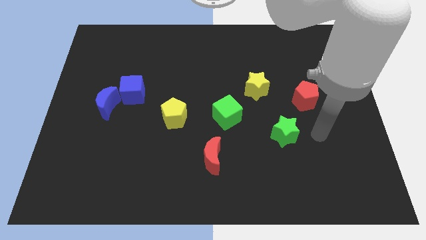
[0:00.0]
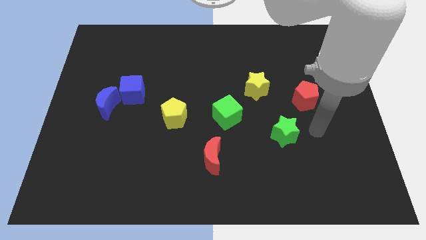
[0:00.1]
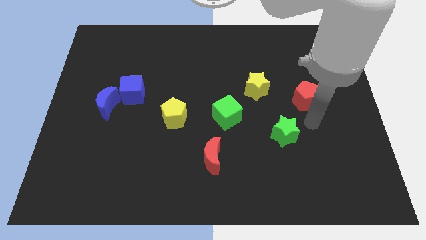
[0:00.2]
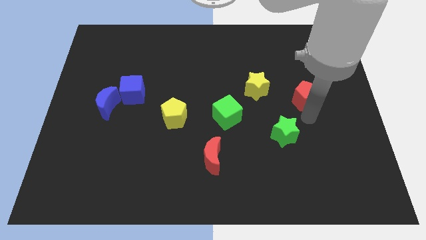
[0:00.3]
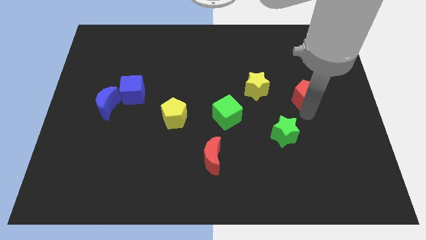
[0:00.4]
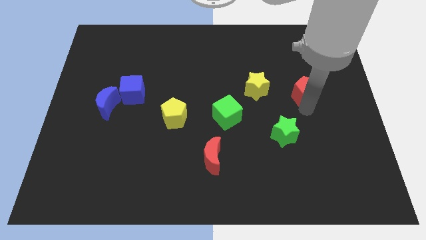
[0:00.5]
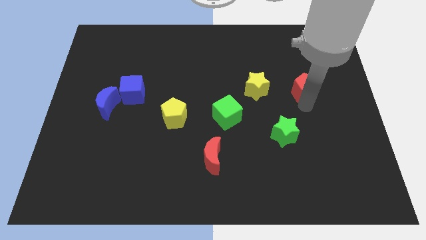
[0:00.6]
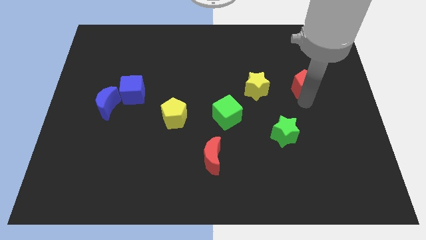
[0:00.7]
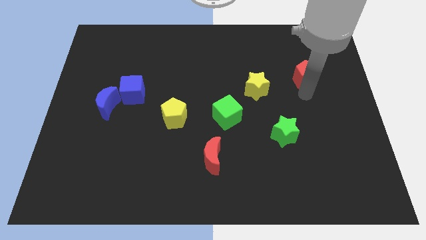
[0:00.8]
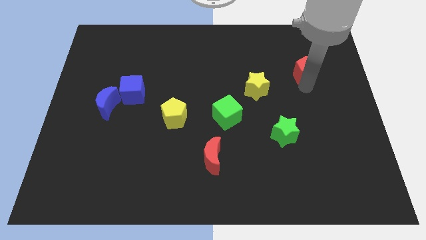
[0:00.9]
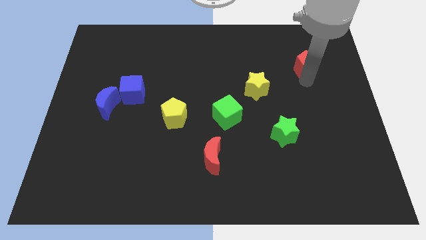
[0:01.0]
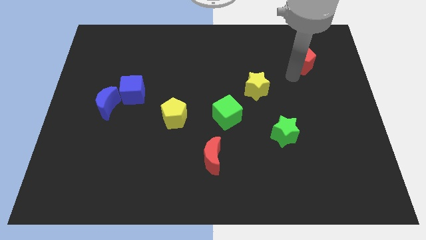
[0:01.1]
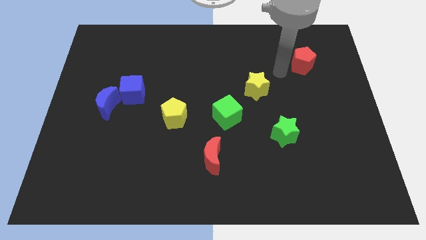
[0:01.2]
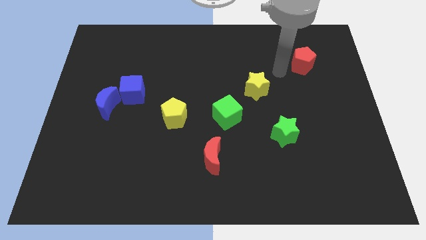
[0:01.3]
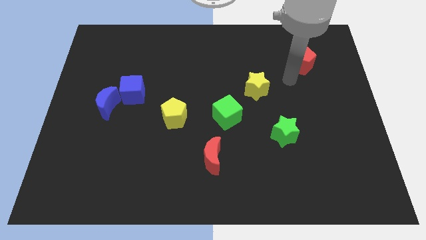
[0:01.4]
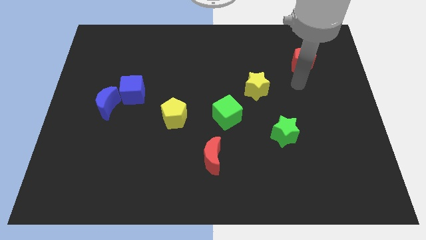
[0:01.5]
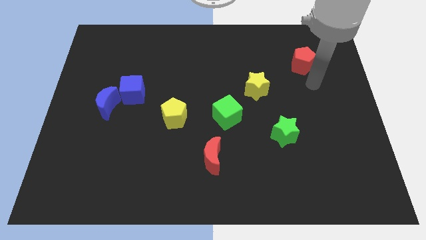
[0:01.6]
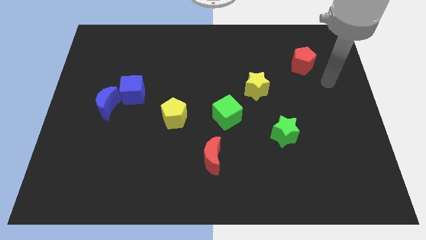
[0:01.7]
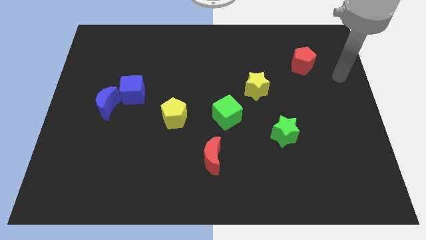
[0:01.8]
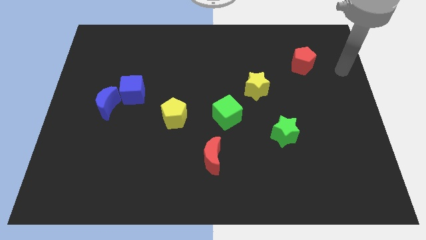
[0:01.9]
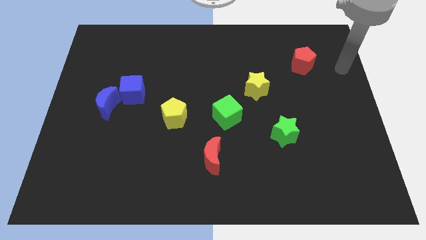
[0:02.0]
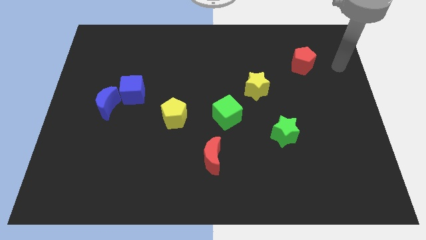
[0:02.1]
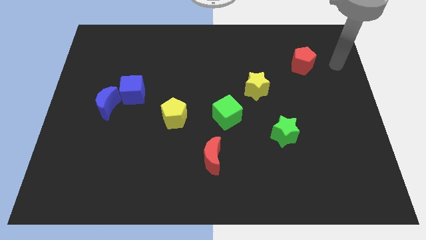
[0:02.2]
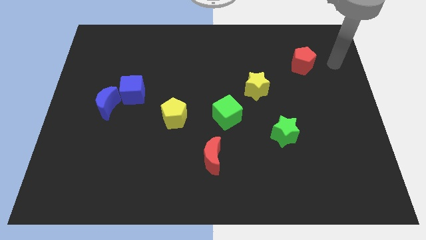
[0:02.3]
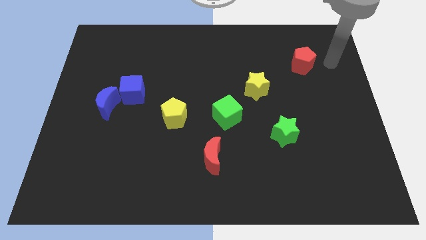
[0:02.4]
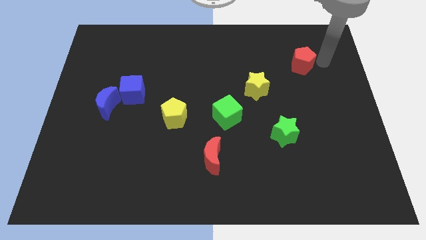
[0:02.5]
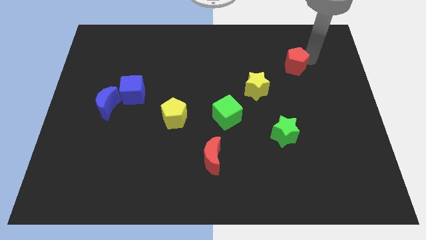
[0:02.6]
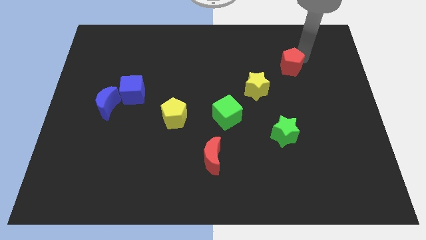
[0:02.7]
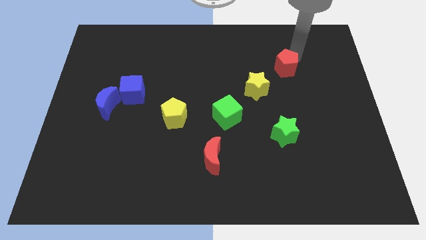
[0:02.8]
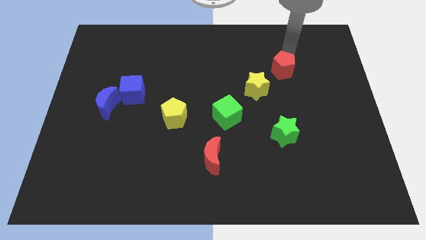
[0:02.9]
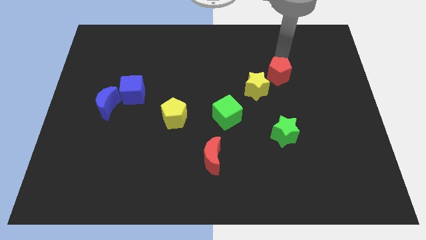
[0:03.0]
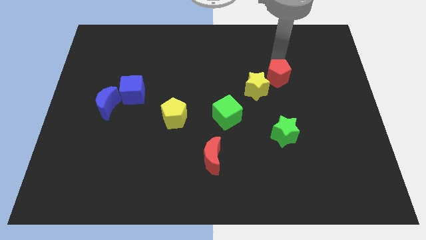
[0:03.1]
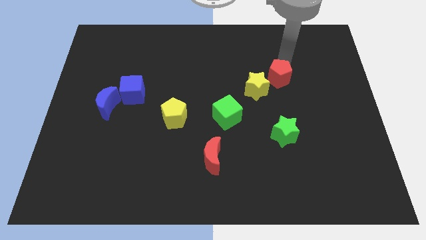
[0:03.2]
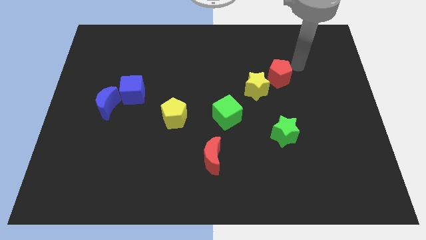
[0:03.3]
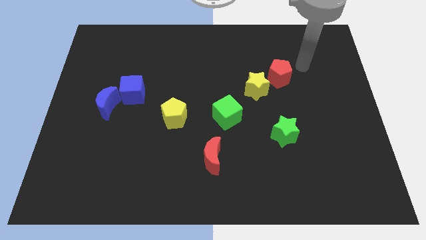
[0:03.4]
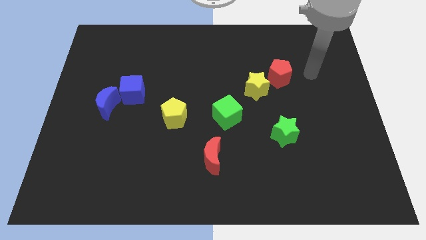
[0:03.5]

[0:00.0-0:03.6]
drag the red pentagon close to the yellow star

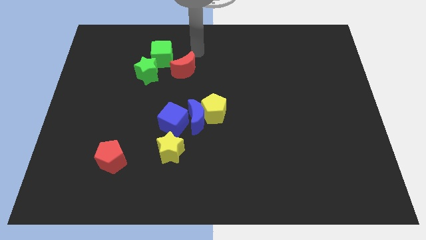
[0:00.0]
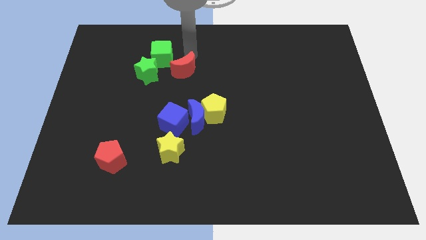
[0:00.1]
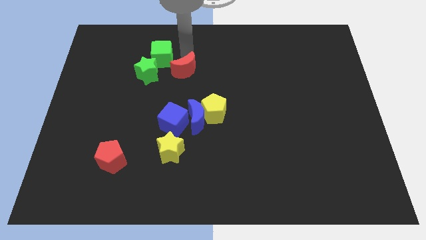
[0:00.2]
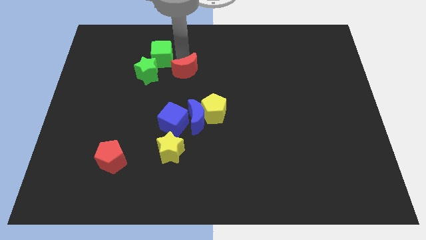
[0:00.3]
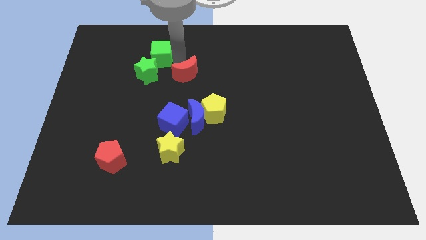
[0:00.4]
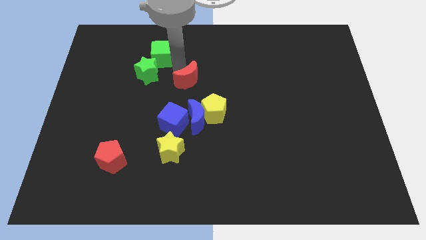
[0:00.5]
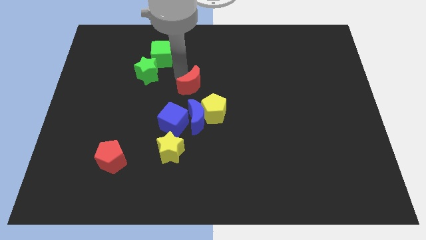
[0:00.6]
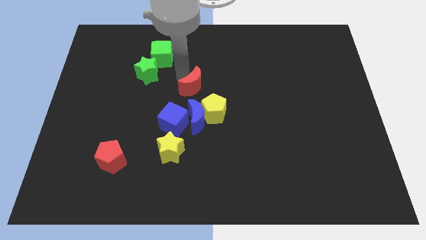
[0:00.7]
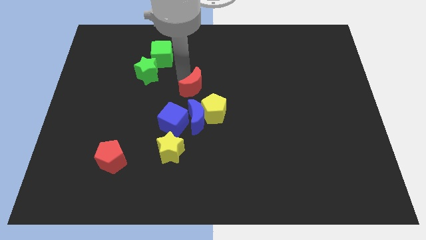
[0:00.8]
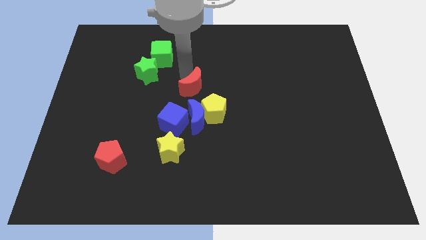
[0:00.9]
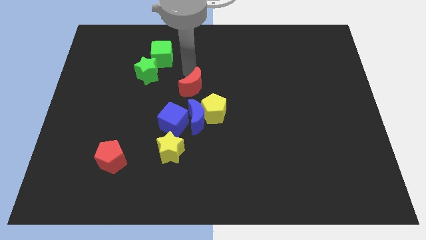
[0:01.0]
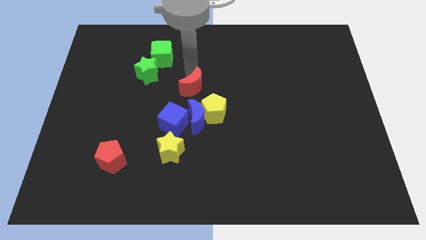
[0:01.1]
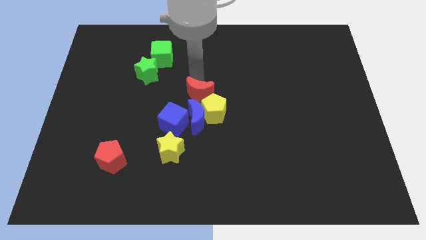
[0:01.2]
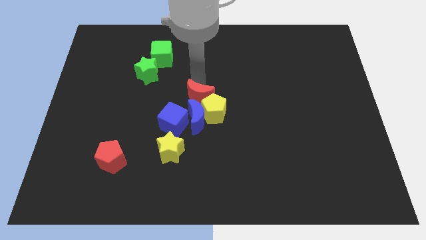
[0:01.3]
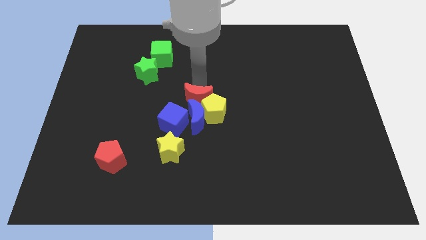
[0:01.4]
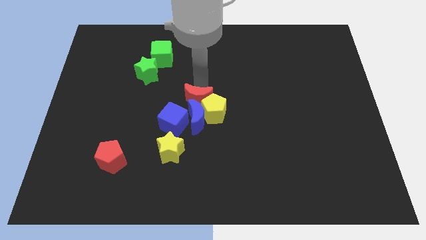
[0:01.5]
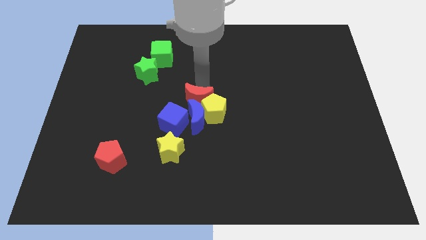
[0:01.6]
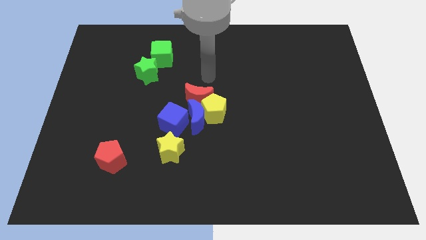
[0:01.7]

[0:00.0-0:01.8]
move the red crescent towards the top of the yellow pentagon and blue crescent

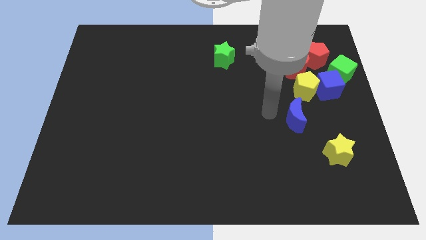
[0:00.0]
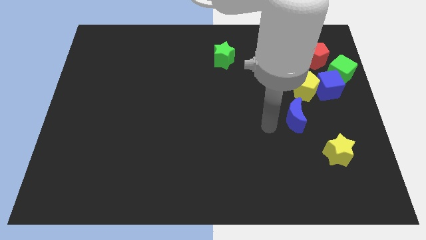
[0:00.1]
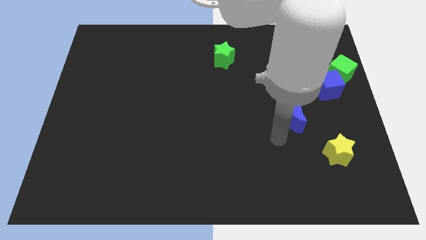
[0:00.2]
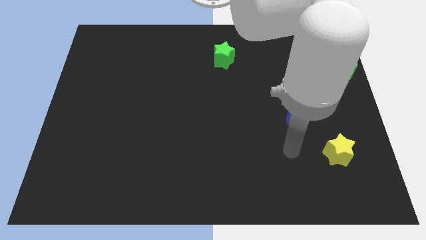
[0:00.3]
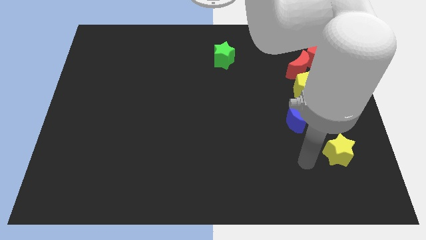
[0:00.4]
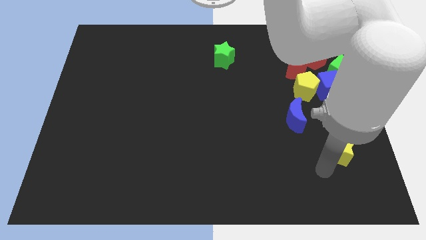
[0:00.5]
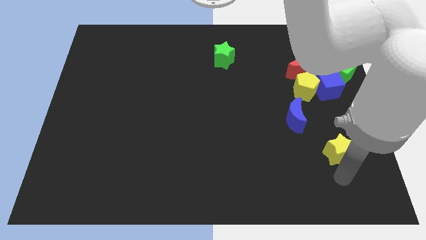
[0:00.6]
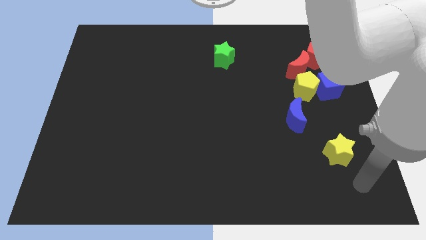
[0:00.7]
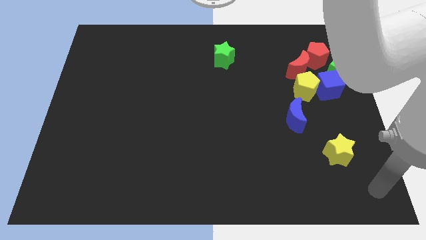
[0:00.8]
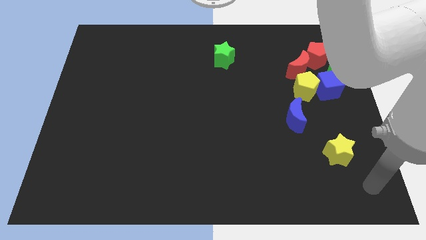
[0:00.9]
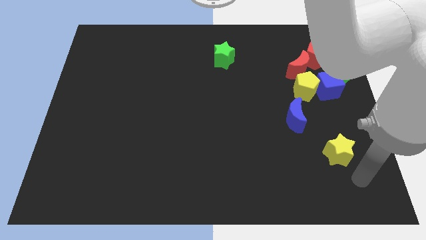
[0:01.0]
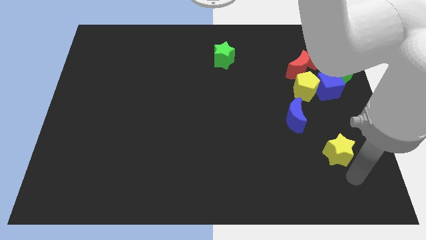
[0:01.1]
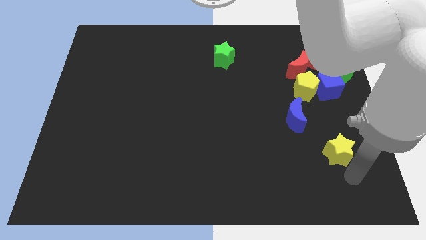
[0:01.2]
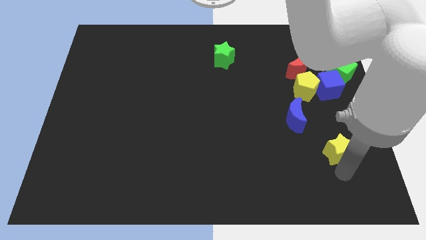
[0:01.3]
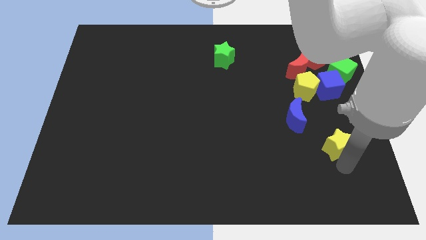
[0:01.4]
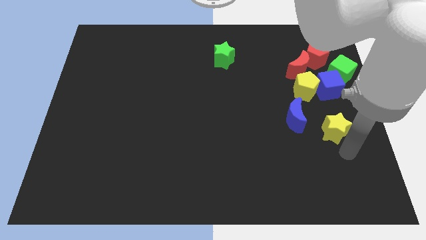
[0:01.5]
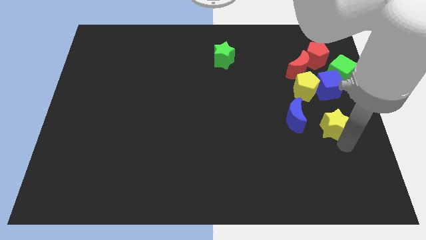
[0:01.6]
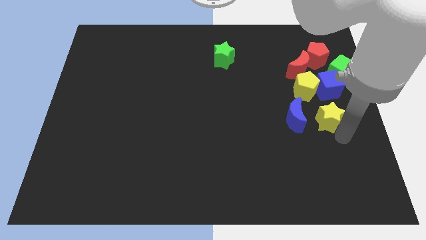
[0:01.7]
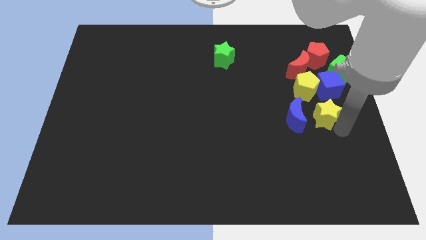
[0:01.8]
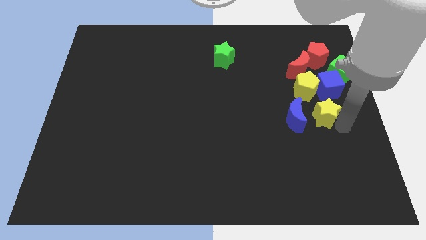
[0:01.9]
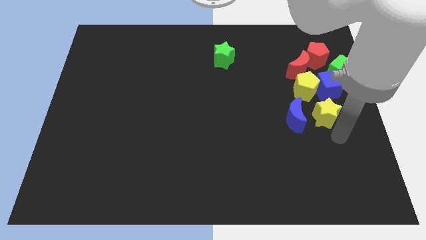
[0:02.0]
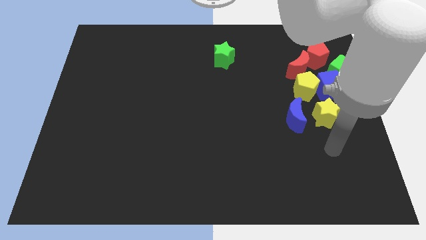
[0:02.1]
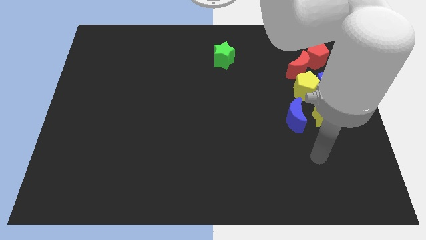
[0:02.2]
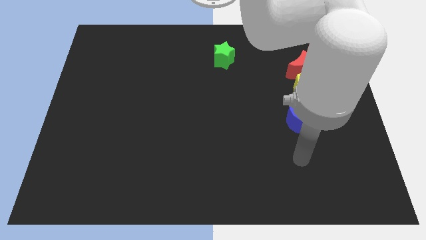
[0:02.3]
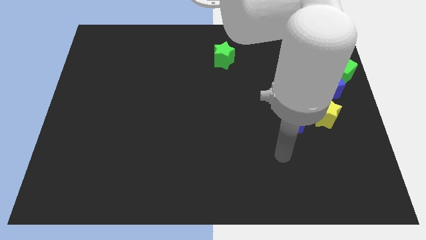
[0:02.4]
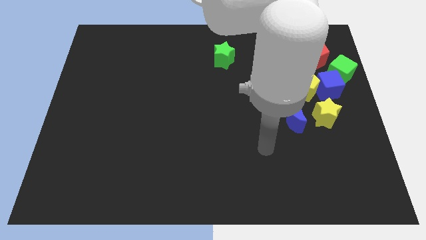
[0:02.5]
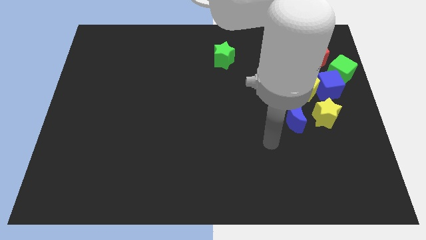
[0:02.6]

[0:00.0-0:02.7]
move the yellow star below the yellow pentagon

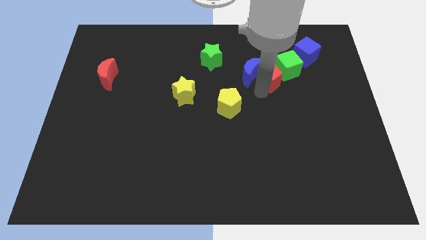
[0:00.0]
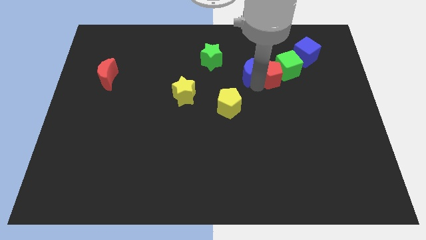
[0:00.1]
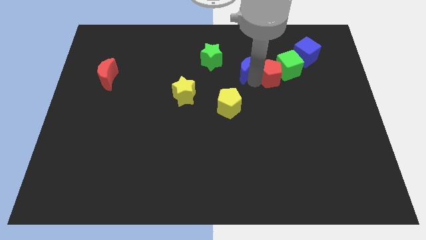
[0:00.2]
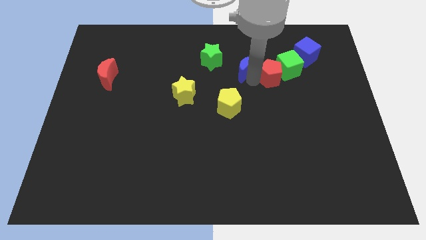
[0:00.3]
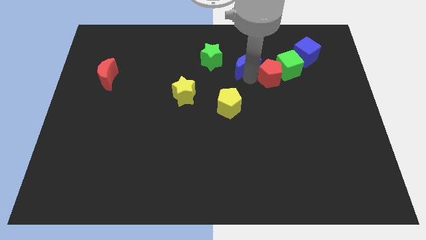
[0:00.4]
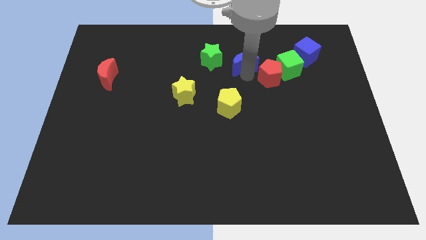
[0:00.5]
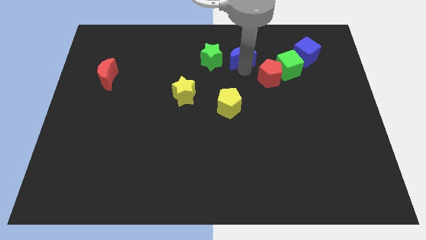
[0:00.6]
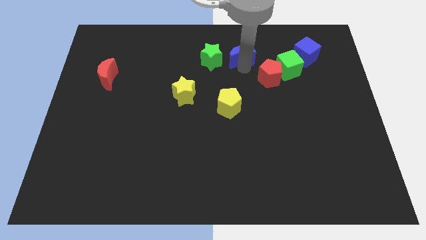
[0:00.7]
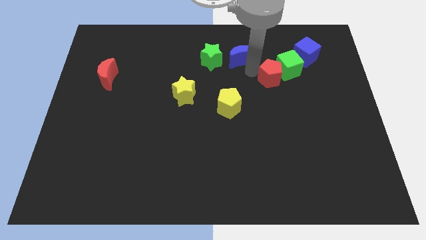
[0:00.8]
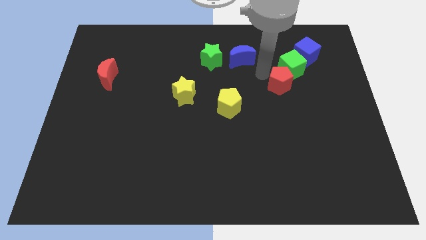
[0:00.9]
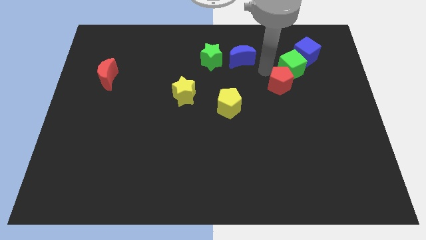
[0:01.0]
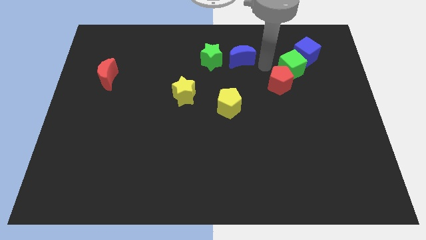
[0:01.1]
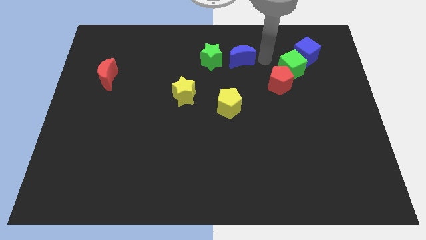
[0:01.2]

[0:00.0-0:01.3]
slightly move the red pentagon towards the right
